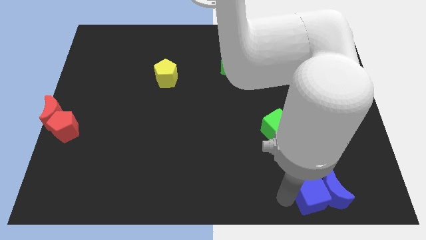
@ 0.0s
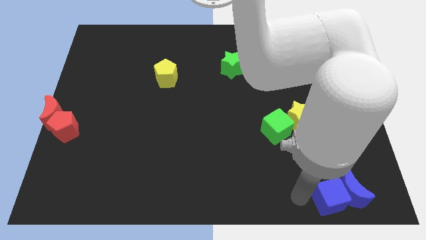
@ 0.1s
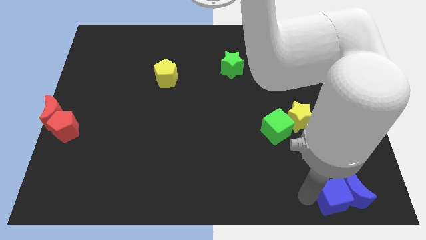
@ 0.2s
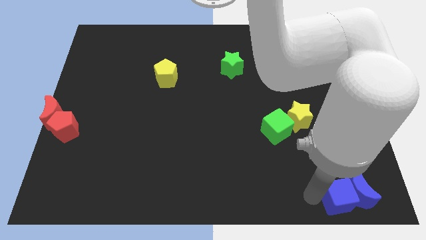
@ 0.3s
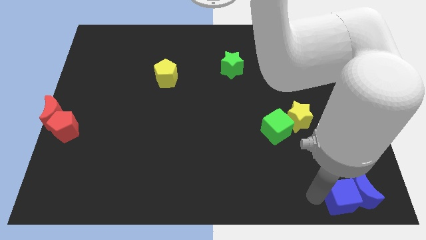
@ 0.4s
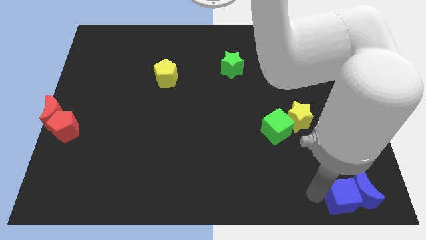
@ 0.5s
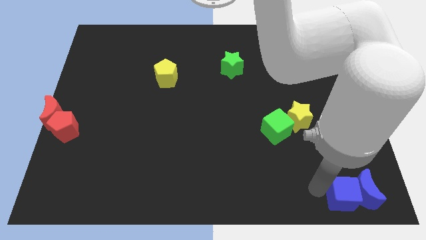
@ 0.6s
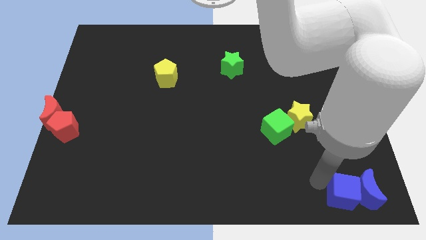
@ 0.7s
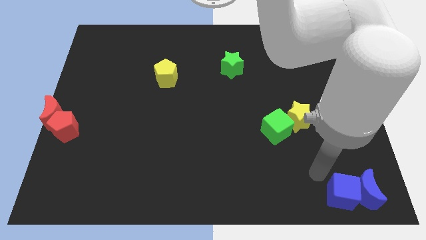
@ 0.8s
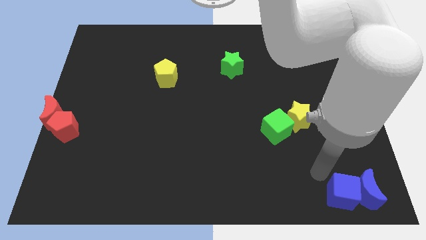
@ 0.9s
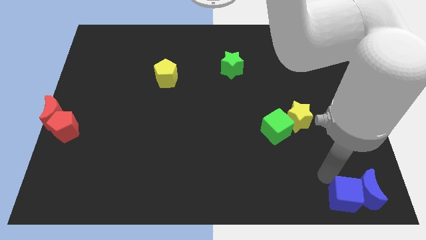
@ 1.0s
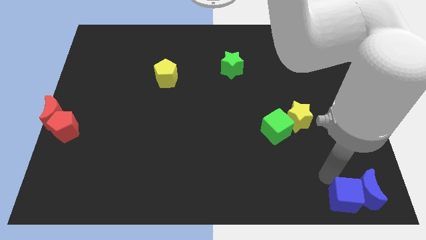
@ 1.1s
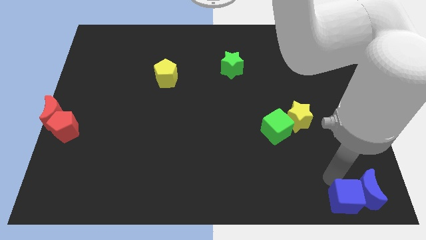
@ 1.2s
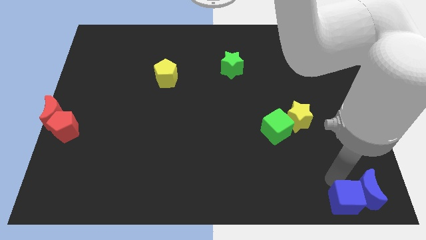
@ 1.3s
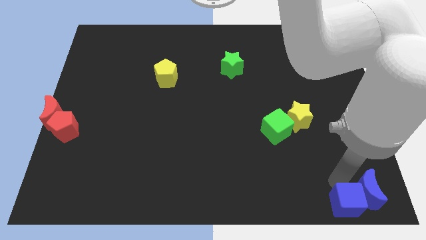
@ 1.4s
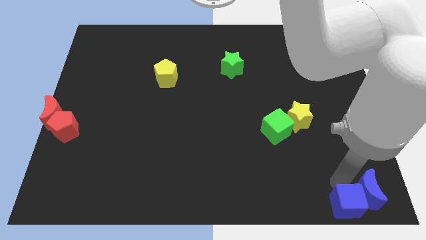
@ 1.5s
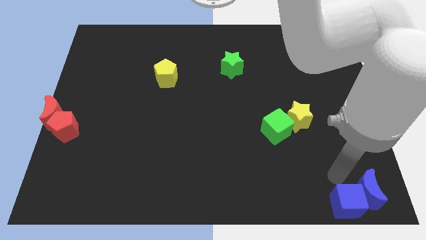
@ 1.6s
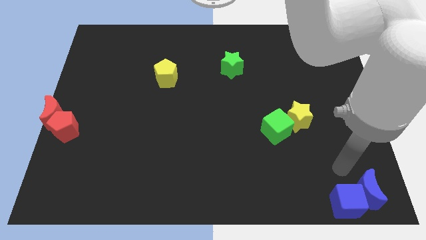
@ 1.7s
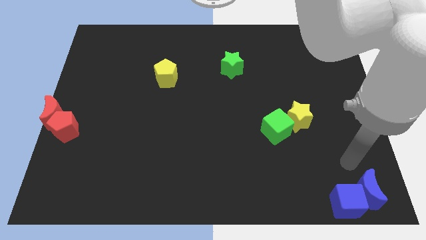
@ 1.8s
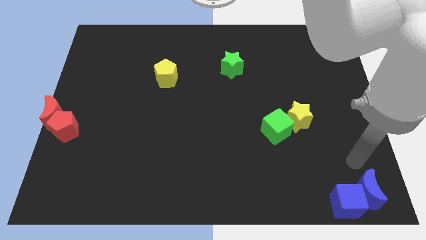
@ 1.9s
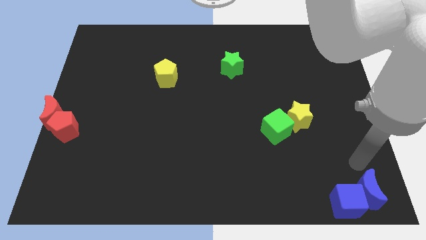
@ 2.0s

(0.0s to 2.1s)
put the group of blue blocks at the bottom right corner of the board

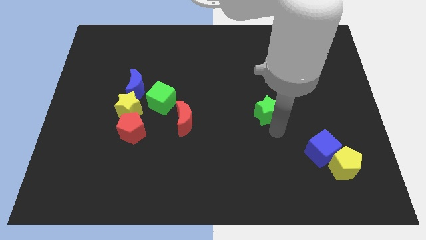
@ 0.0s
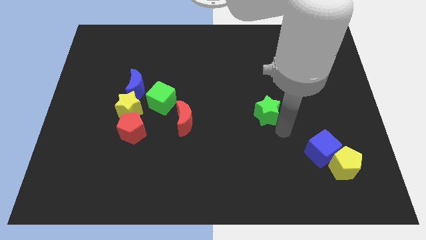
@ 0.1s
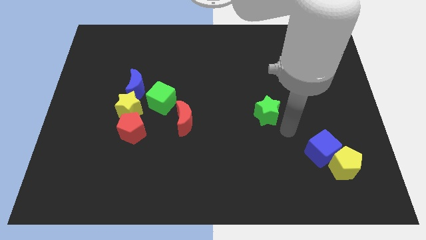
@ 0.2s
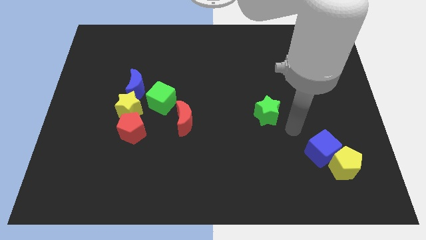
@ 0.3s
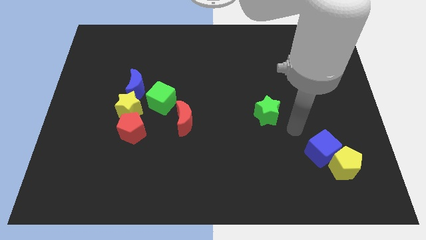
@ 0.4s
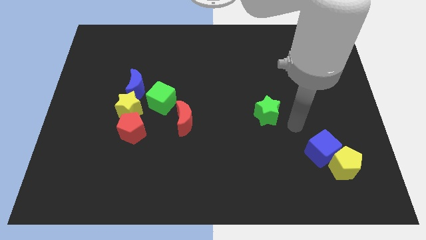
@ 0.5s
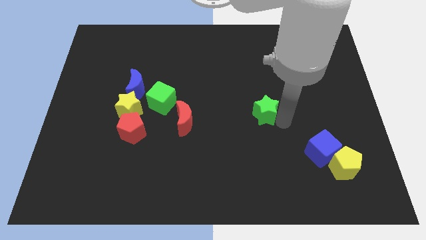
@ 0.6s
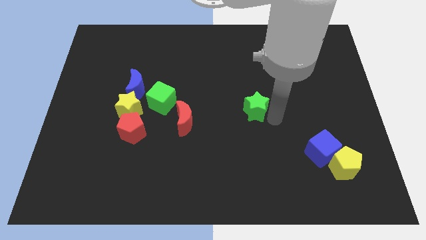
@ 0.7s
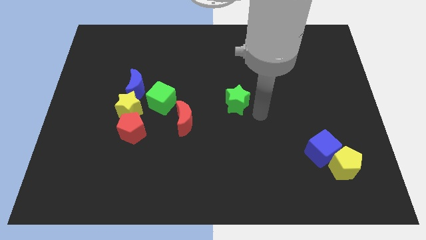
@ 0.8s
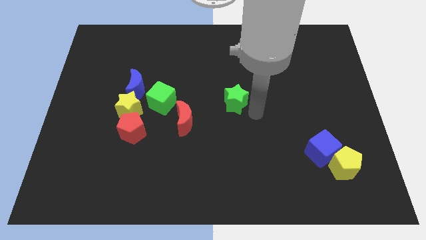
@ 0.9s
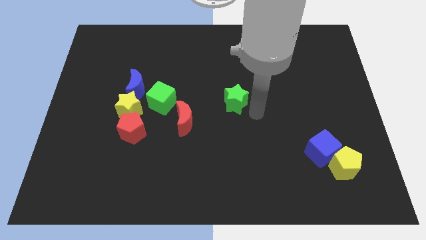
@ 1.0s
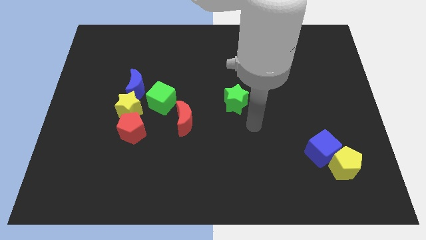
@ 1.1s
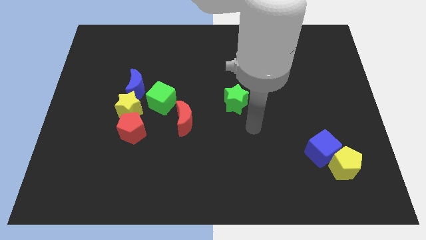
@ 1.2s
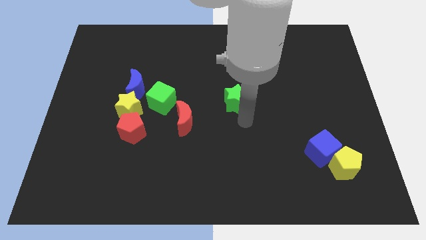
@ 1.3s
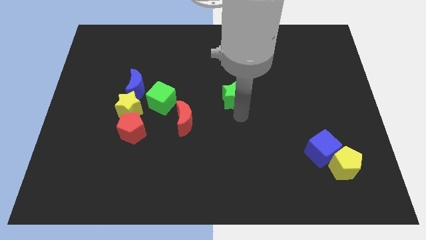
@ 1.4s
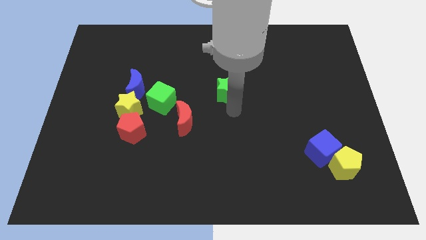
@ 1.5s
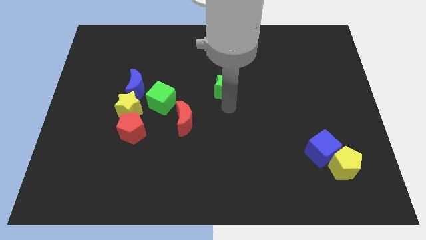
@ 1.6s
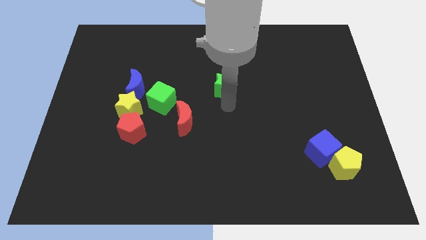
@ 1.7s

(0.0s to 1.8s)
move the green star to the top right of the red crescent

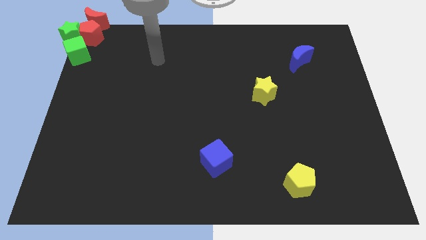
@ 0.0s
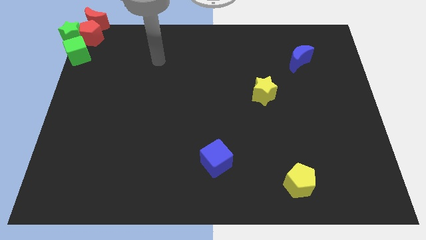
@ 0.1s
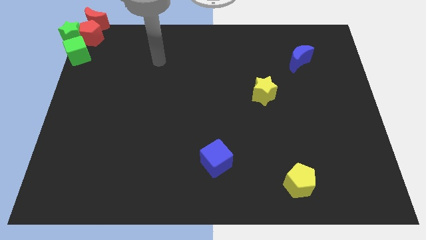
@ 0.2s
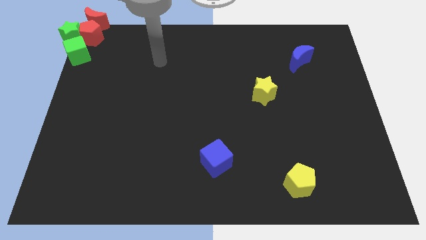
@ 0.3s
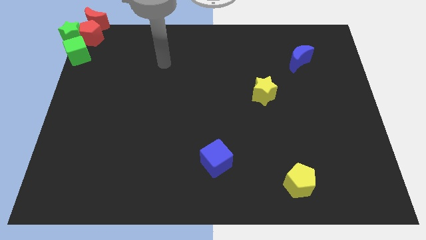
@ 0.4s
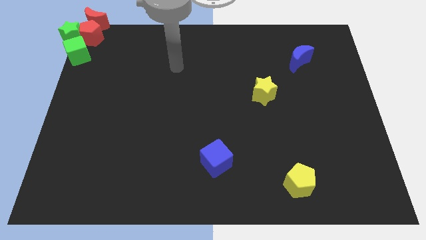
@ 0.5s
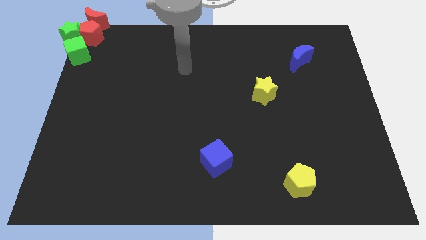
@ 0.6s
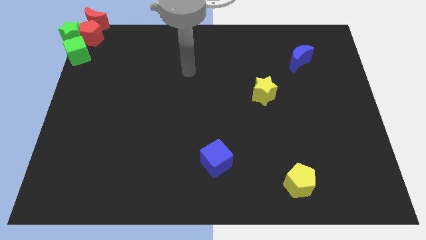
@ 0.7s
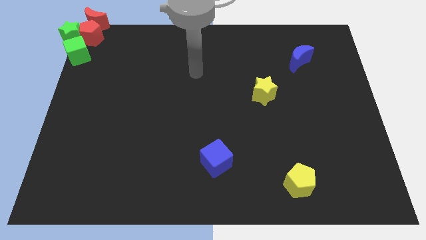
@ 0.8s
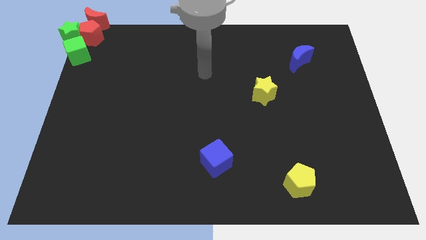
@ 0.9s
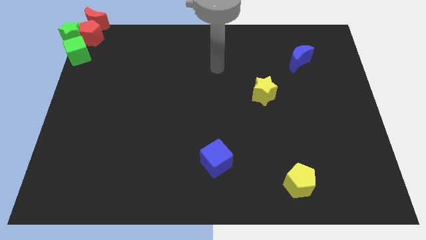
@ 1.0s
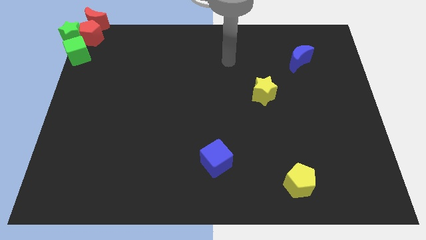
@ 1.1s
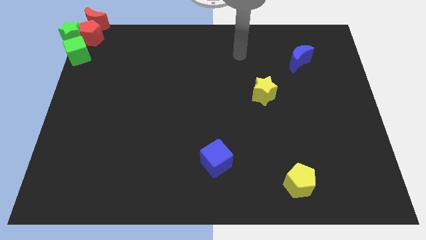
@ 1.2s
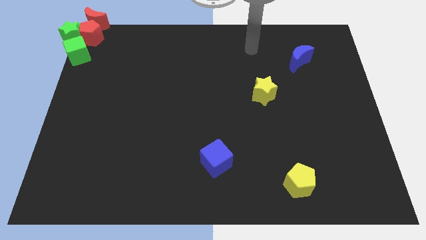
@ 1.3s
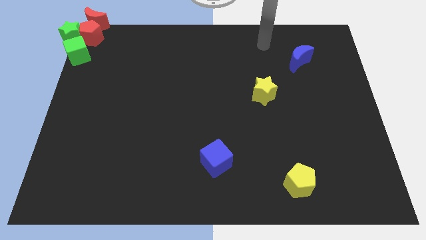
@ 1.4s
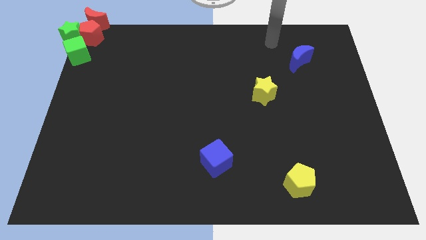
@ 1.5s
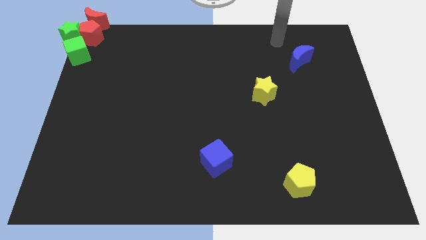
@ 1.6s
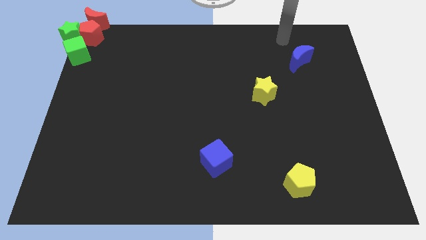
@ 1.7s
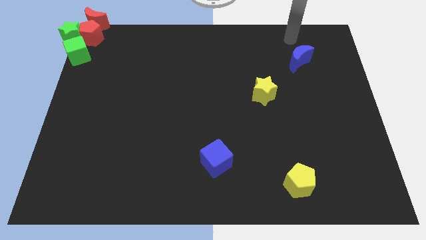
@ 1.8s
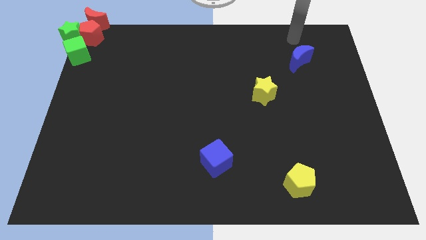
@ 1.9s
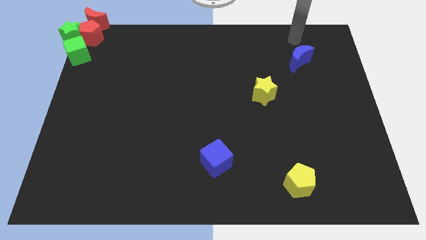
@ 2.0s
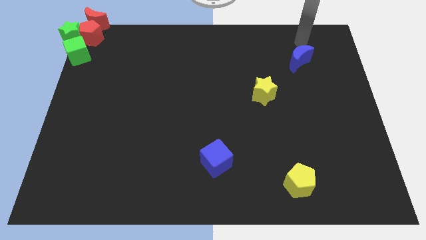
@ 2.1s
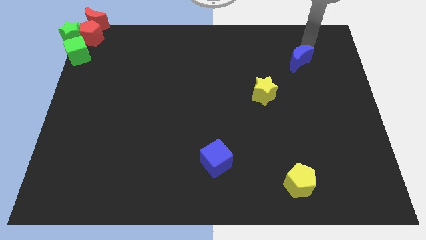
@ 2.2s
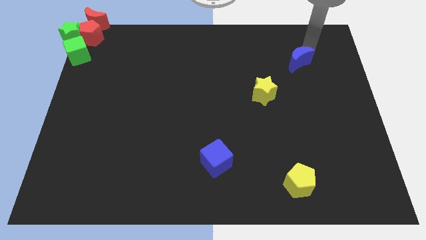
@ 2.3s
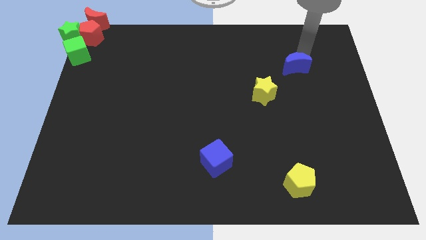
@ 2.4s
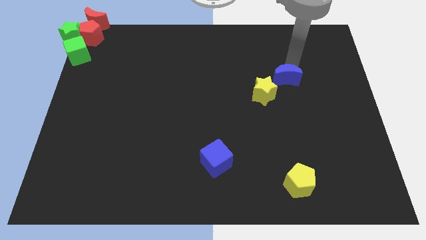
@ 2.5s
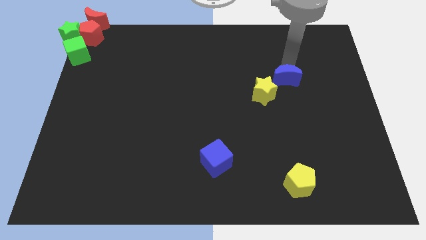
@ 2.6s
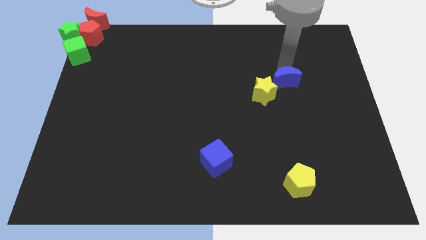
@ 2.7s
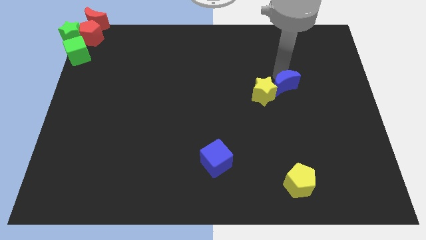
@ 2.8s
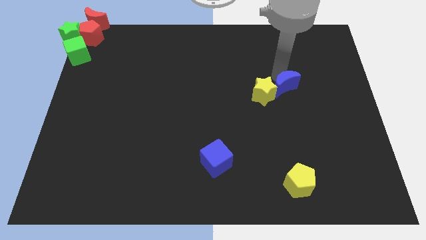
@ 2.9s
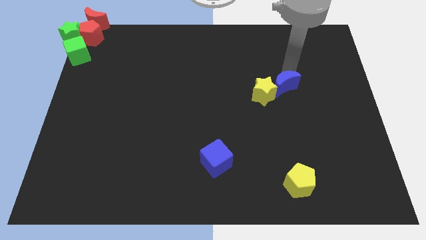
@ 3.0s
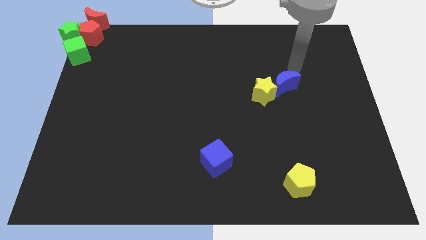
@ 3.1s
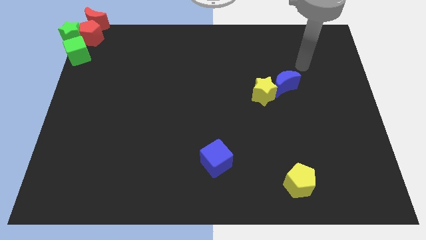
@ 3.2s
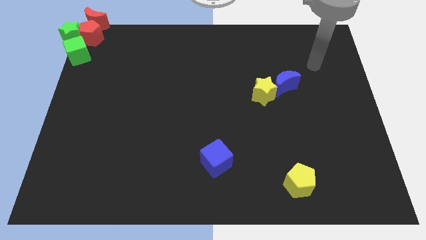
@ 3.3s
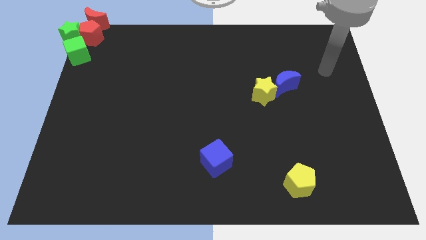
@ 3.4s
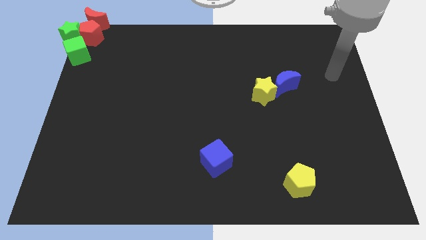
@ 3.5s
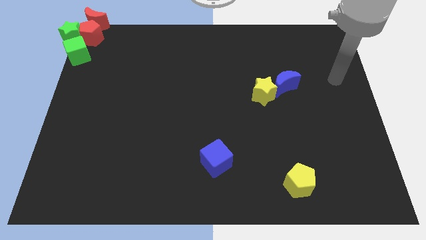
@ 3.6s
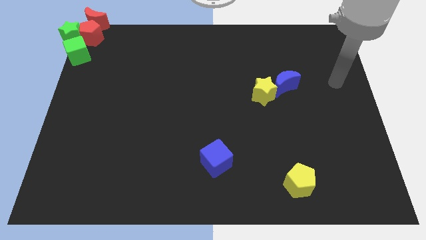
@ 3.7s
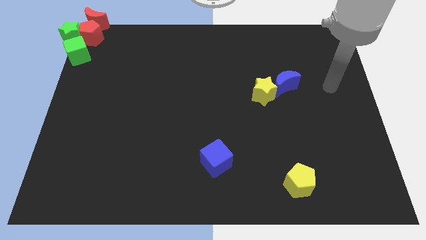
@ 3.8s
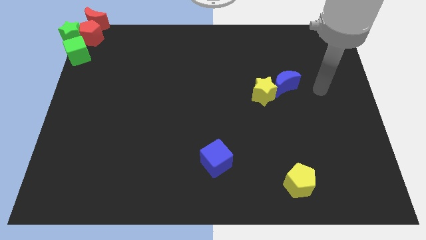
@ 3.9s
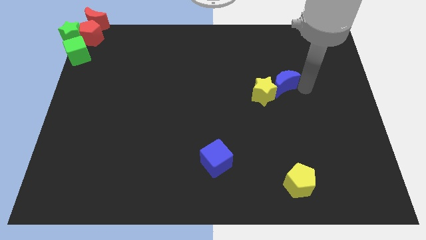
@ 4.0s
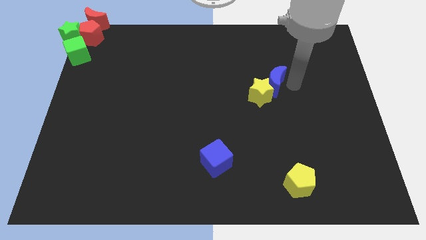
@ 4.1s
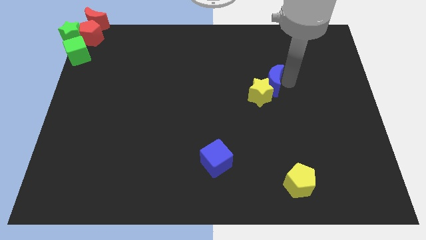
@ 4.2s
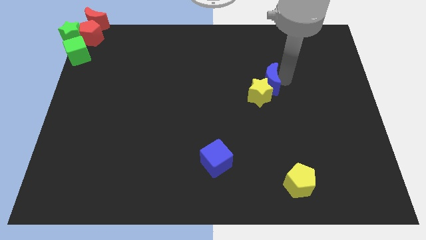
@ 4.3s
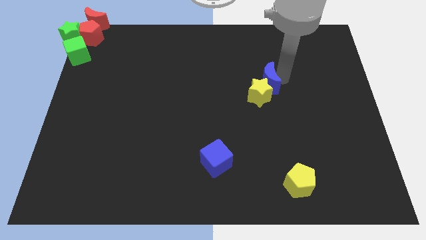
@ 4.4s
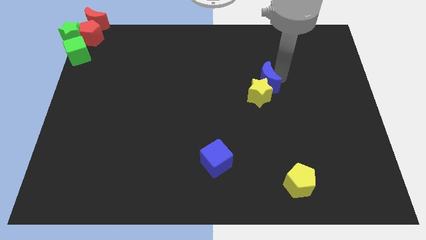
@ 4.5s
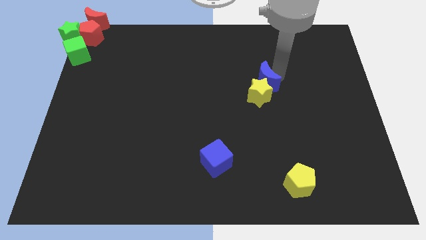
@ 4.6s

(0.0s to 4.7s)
push the blue moon into the yellow star

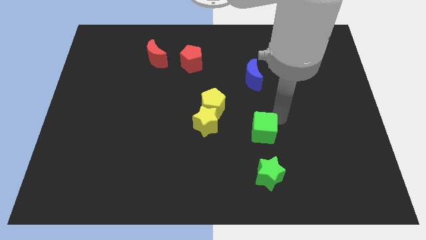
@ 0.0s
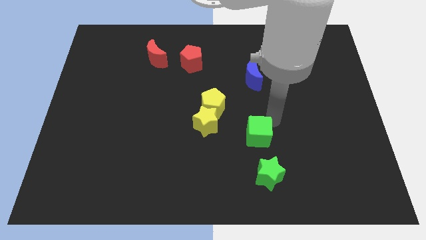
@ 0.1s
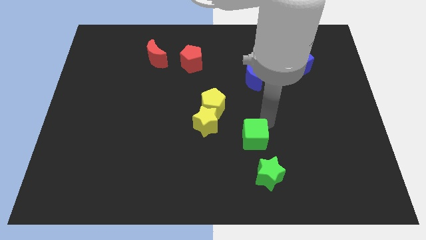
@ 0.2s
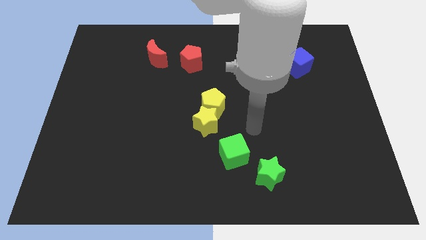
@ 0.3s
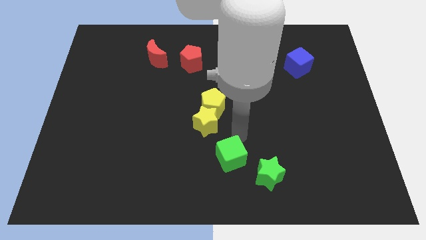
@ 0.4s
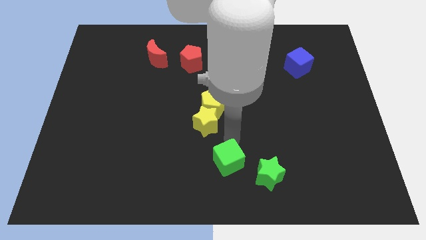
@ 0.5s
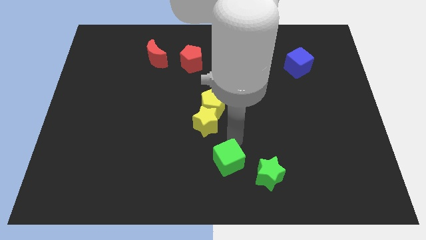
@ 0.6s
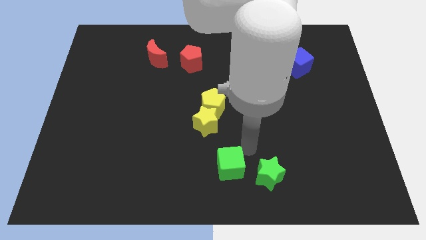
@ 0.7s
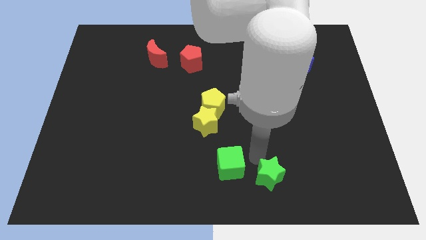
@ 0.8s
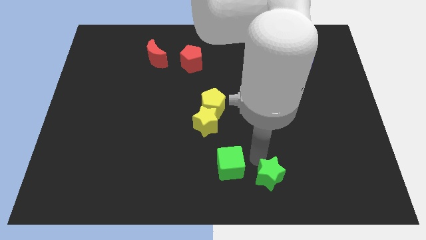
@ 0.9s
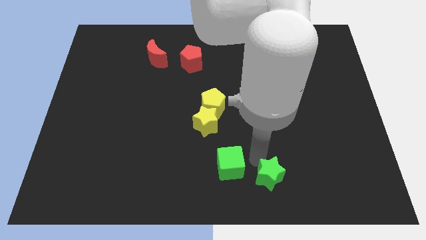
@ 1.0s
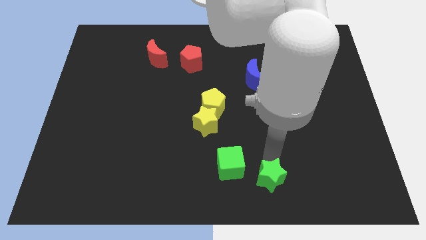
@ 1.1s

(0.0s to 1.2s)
place green cube to the left of the green star
